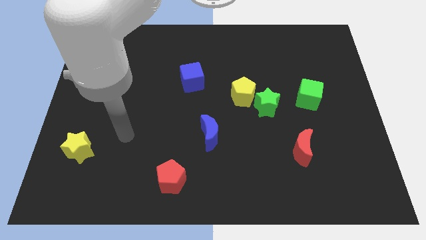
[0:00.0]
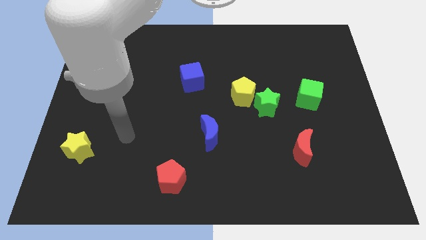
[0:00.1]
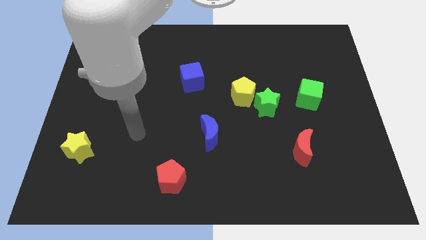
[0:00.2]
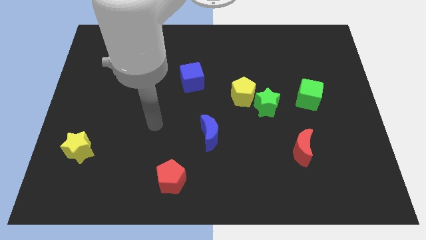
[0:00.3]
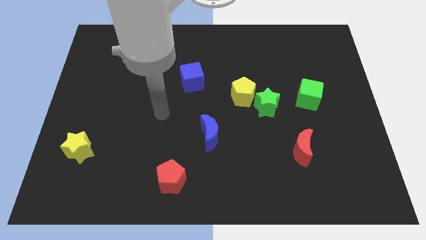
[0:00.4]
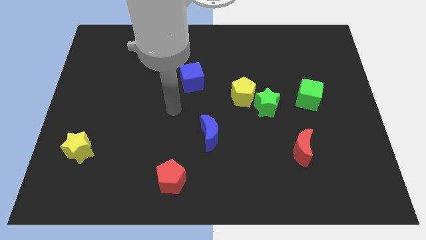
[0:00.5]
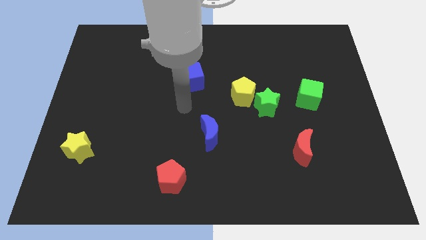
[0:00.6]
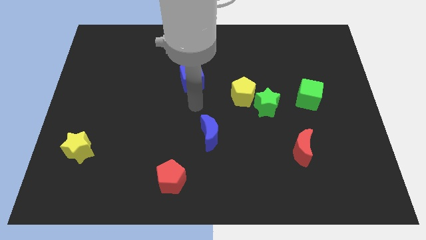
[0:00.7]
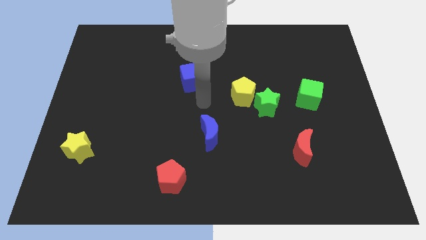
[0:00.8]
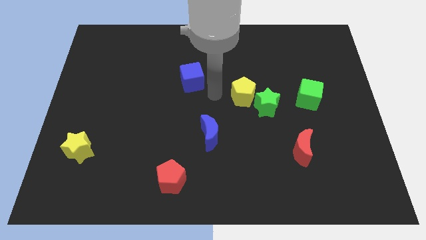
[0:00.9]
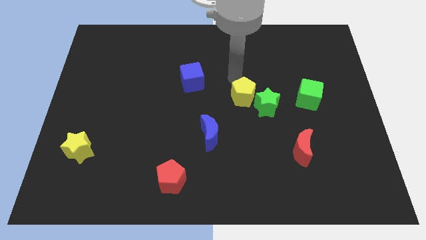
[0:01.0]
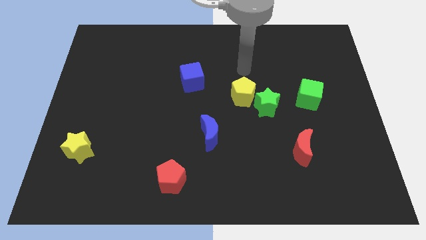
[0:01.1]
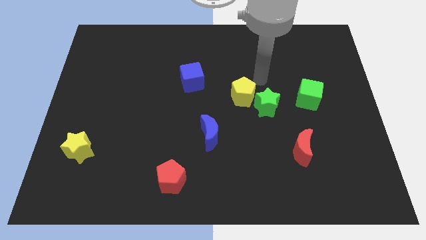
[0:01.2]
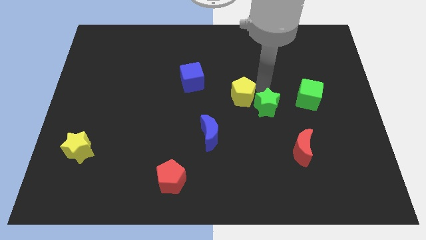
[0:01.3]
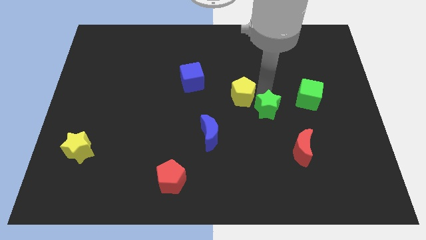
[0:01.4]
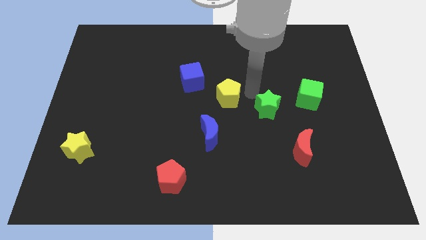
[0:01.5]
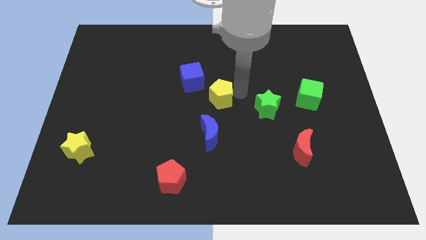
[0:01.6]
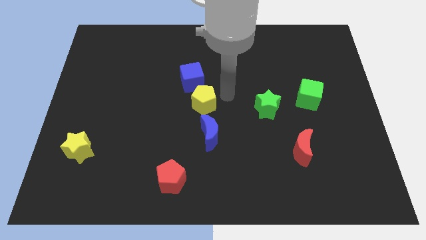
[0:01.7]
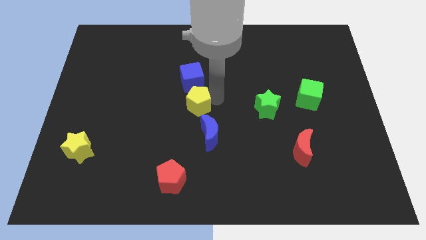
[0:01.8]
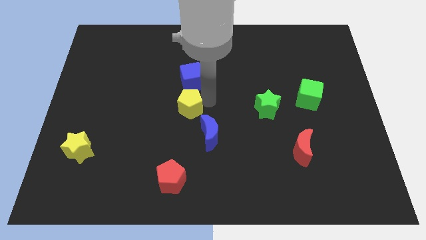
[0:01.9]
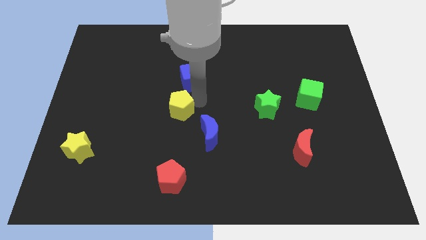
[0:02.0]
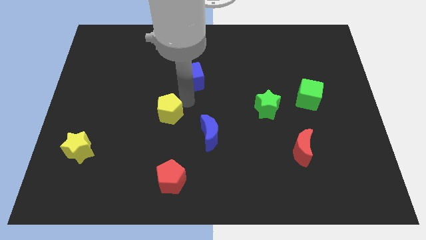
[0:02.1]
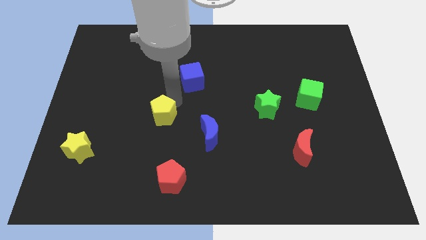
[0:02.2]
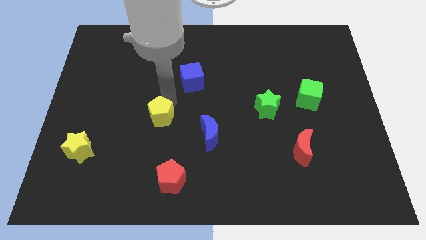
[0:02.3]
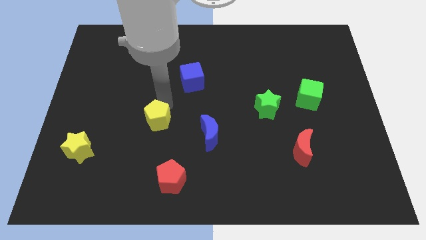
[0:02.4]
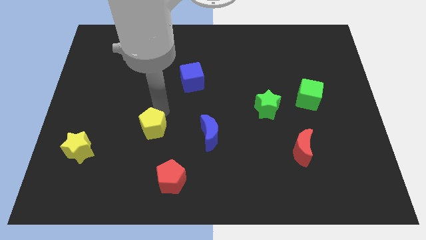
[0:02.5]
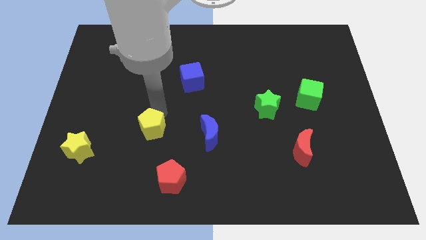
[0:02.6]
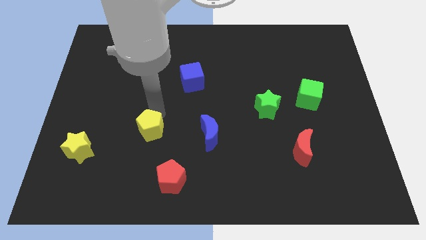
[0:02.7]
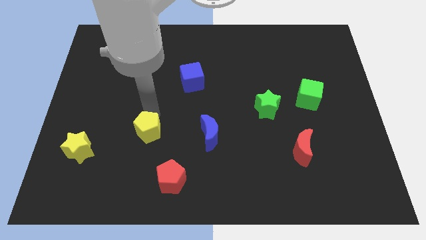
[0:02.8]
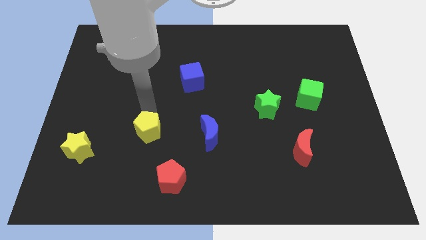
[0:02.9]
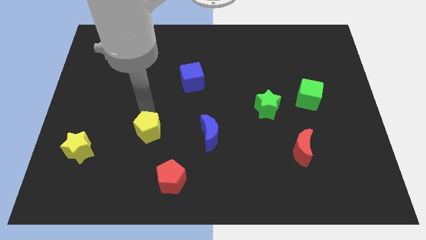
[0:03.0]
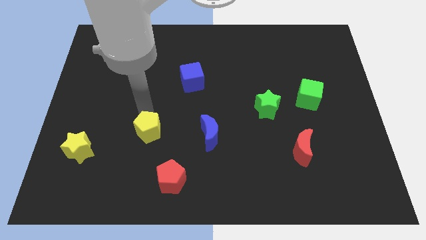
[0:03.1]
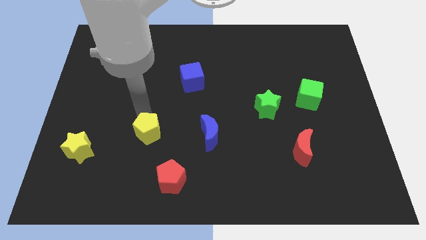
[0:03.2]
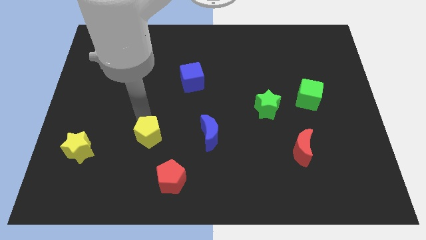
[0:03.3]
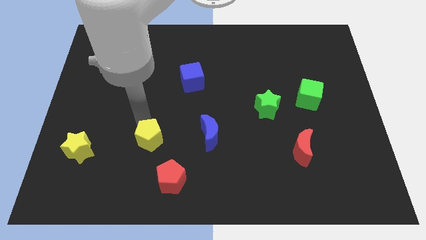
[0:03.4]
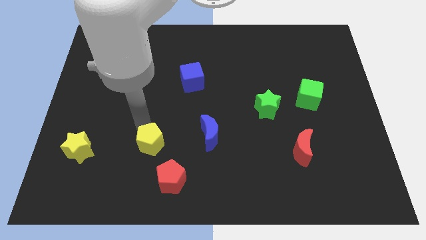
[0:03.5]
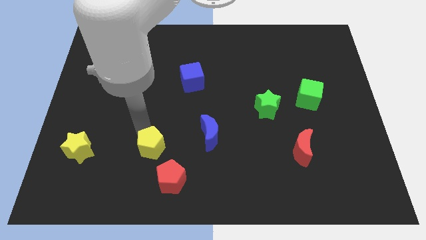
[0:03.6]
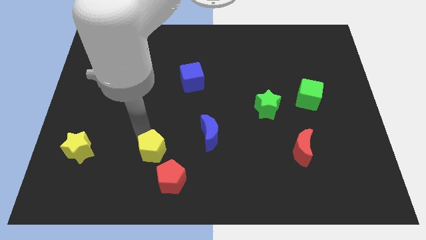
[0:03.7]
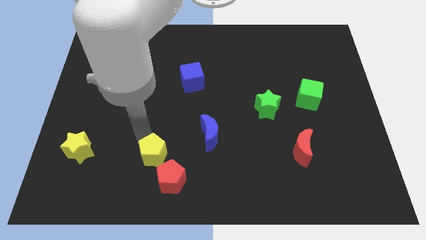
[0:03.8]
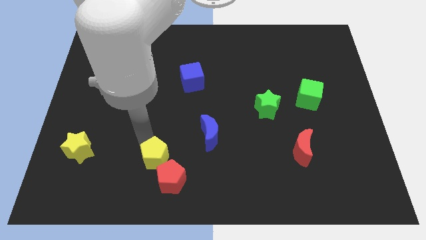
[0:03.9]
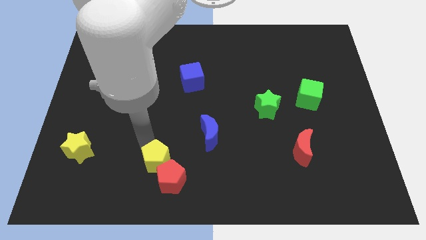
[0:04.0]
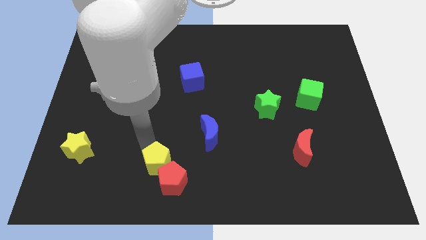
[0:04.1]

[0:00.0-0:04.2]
put the yellow pentagon next to the red pentagon

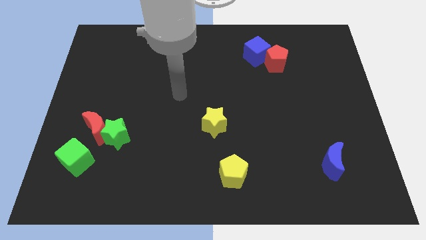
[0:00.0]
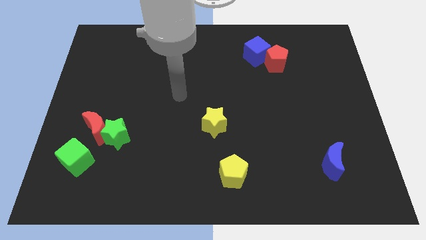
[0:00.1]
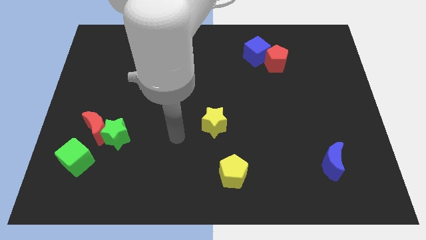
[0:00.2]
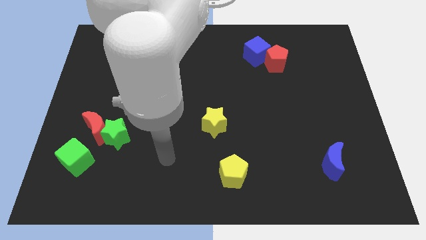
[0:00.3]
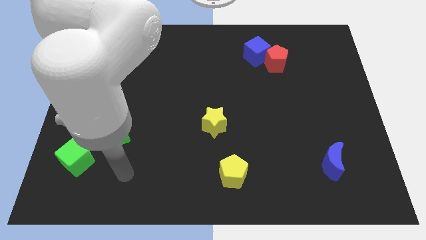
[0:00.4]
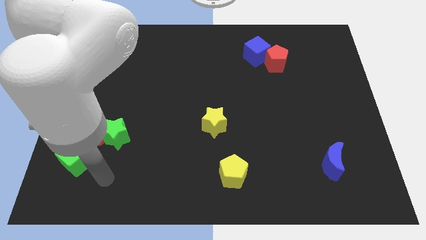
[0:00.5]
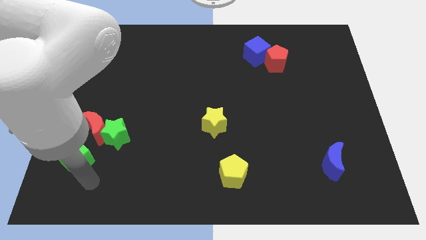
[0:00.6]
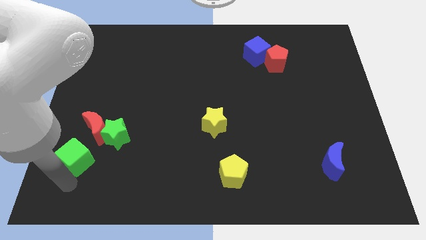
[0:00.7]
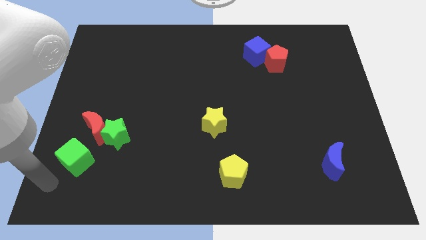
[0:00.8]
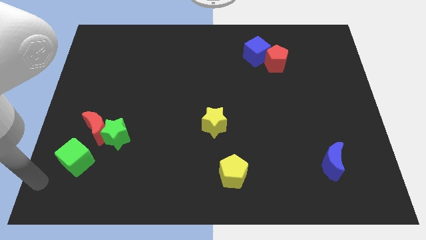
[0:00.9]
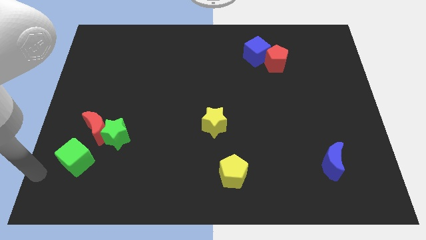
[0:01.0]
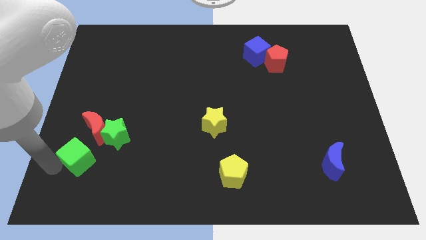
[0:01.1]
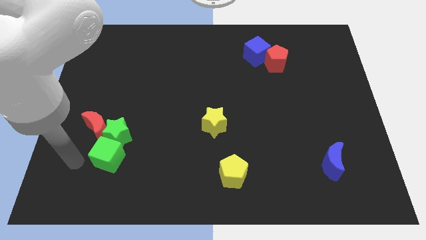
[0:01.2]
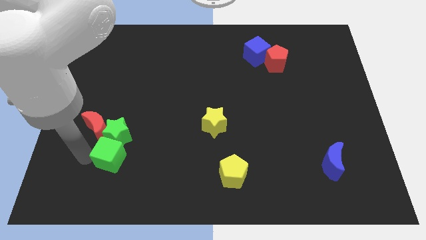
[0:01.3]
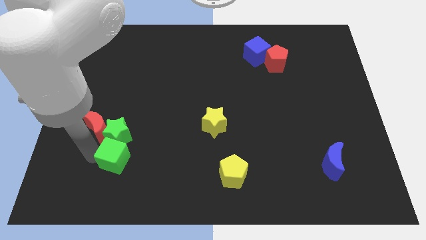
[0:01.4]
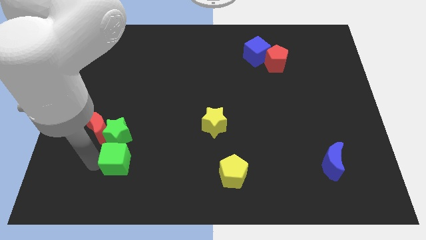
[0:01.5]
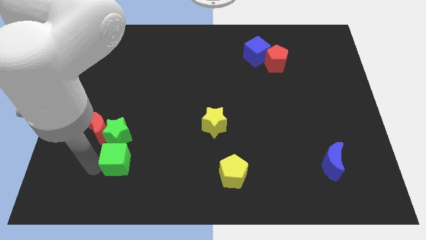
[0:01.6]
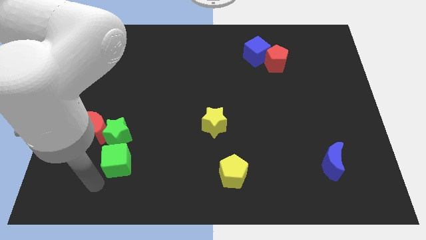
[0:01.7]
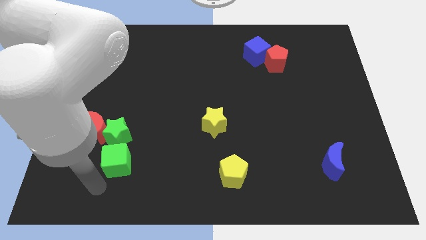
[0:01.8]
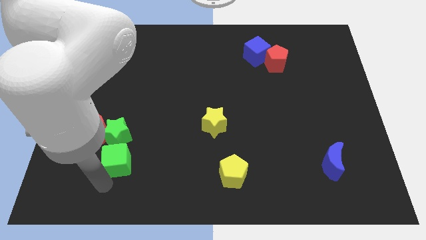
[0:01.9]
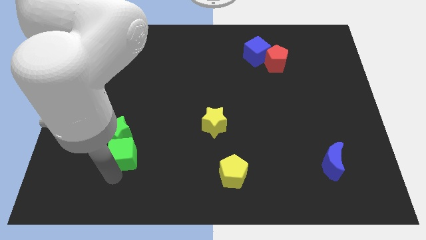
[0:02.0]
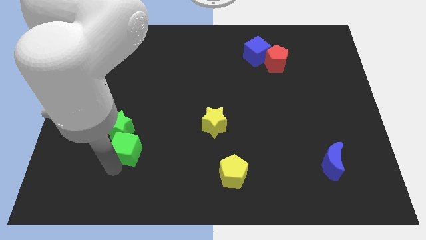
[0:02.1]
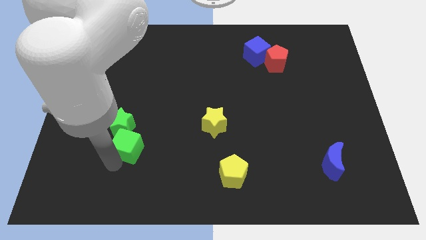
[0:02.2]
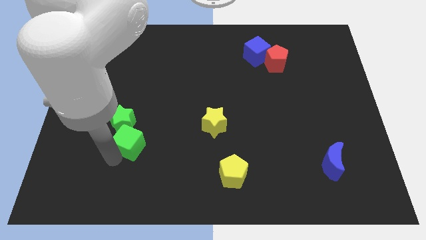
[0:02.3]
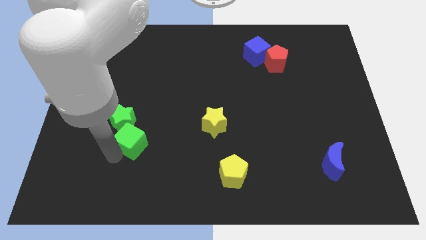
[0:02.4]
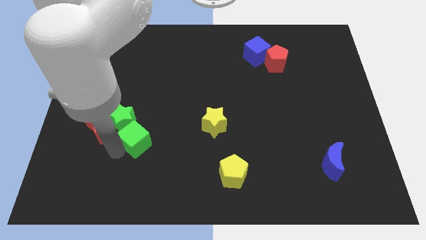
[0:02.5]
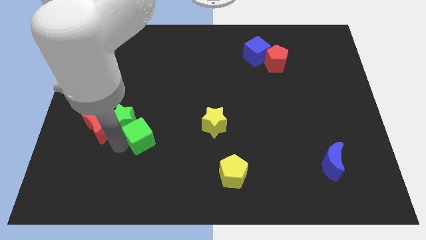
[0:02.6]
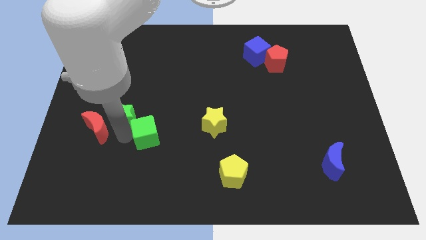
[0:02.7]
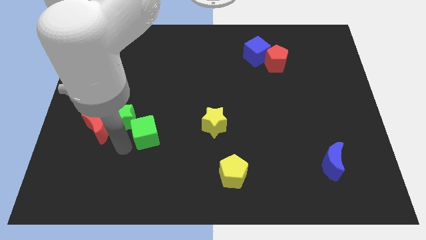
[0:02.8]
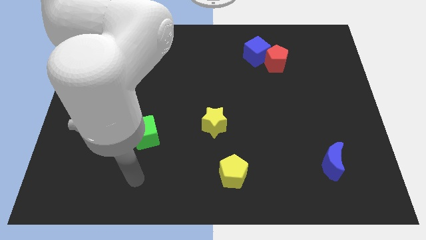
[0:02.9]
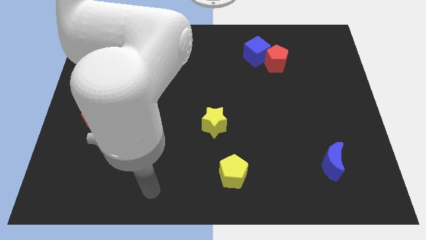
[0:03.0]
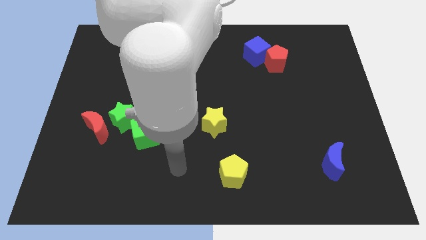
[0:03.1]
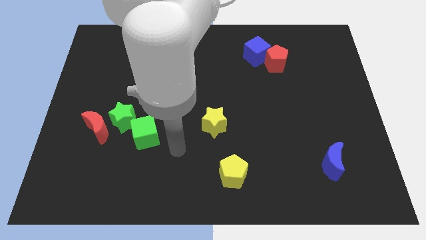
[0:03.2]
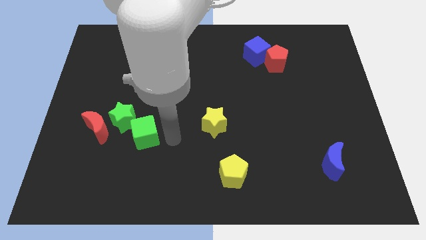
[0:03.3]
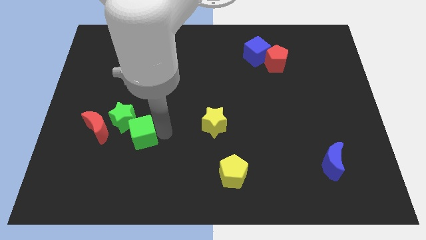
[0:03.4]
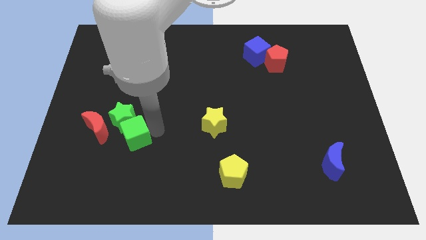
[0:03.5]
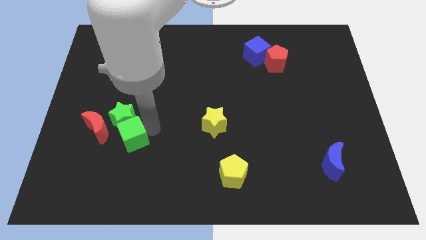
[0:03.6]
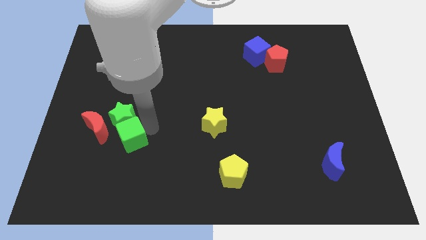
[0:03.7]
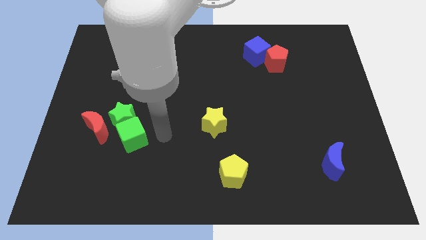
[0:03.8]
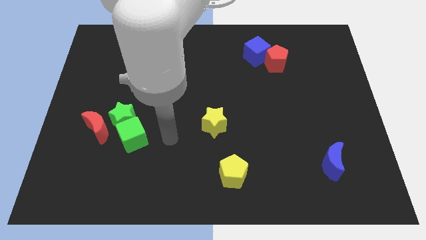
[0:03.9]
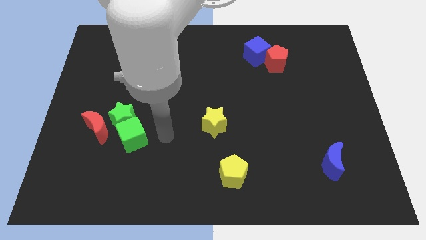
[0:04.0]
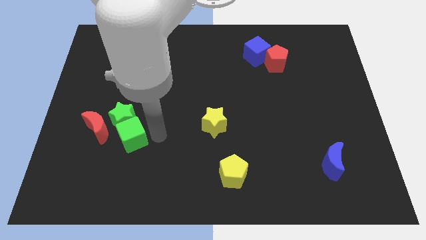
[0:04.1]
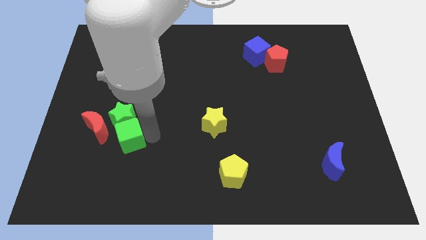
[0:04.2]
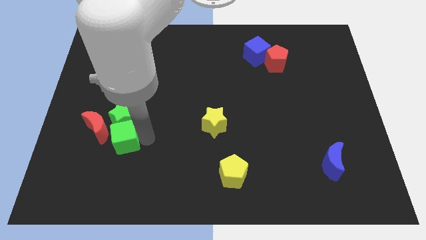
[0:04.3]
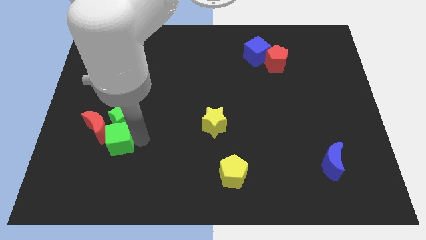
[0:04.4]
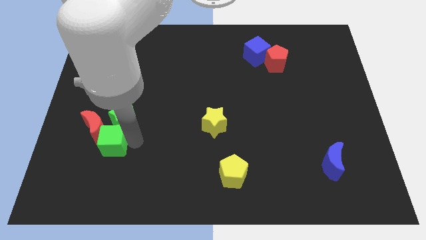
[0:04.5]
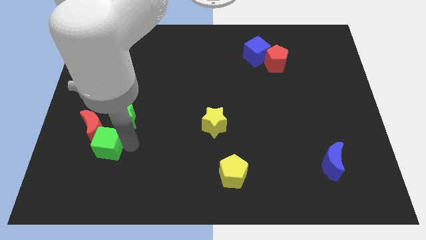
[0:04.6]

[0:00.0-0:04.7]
move the green cube to the red moon
